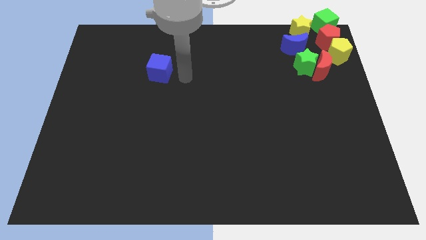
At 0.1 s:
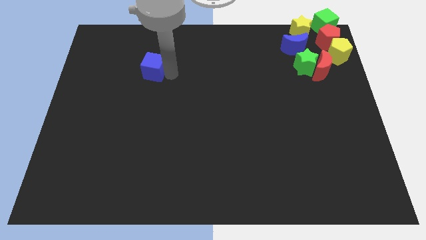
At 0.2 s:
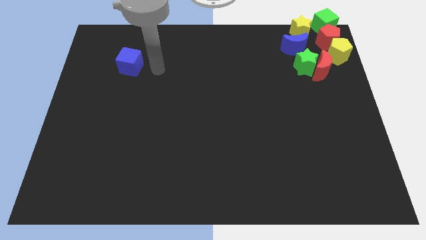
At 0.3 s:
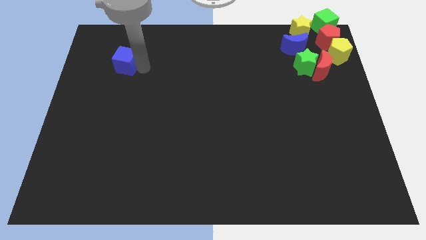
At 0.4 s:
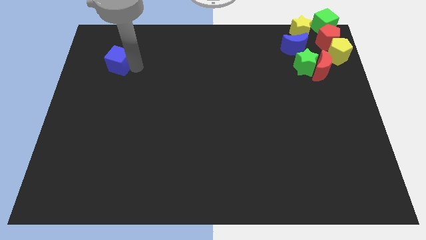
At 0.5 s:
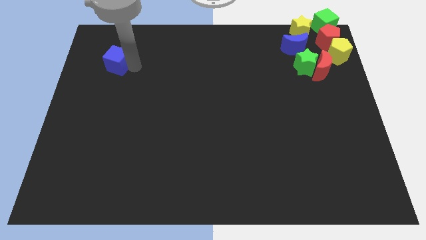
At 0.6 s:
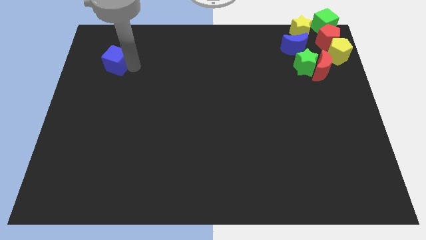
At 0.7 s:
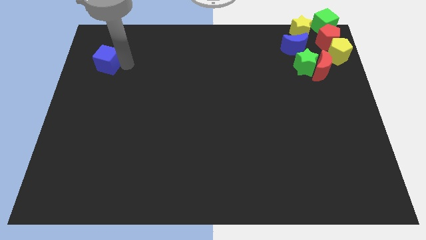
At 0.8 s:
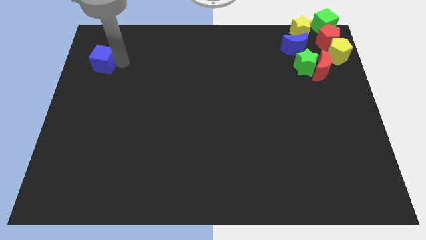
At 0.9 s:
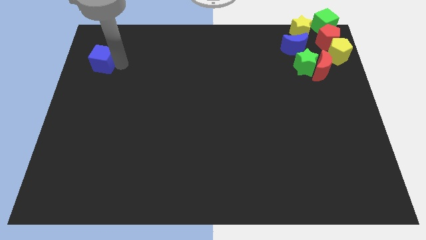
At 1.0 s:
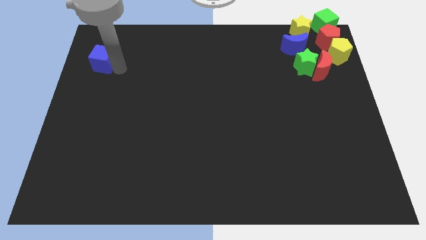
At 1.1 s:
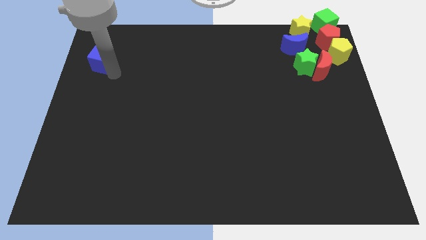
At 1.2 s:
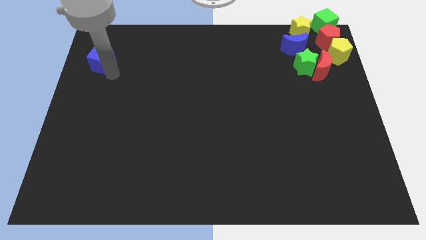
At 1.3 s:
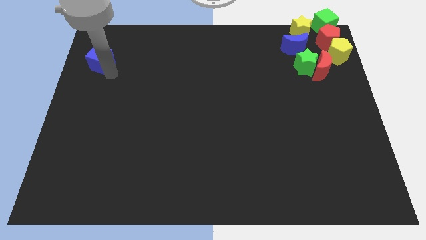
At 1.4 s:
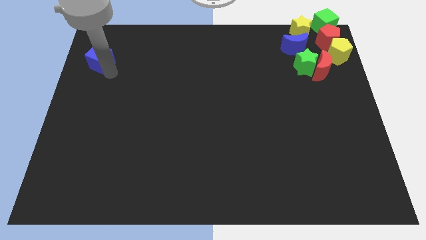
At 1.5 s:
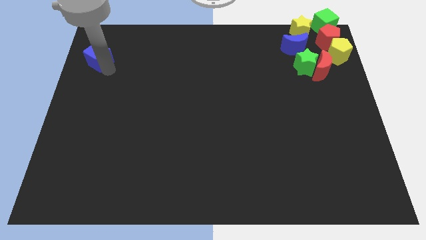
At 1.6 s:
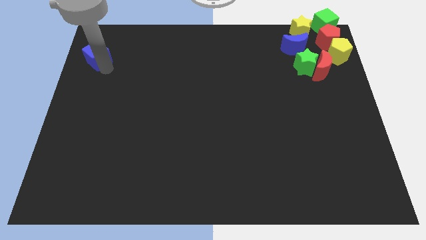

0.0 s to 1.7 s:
slide blue cube to the top left

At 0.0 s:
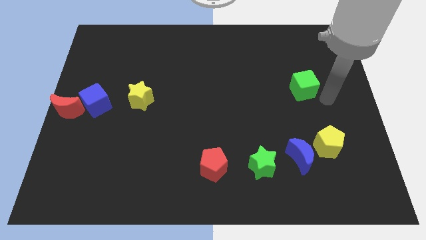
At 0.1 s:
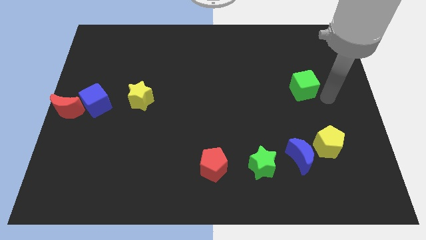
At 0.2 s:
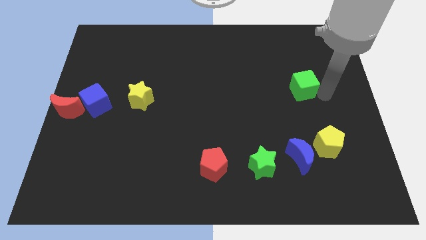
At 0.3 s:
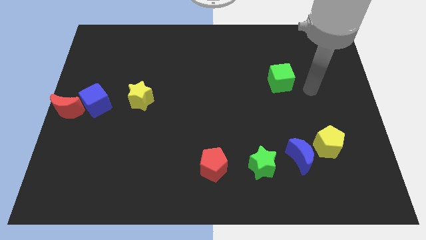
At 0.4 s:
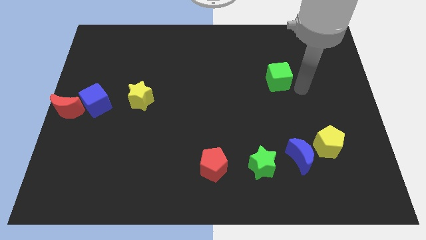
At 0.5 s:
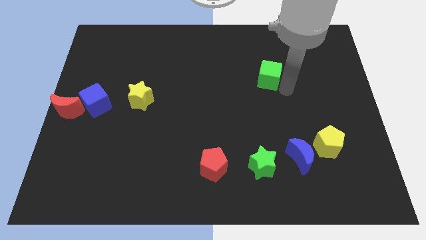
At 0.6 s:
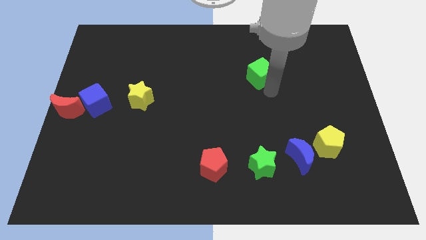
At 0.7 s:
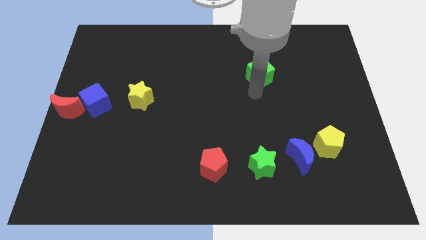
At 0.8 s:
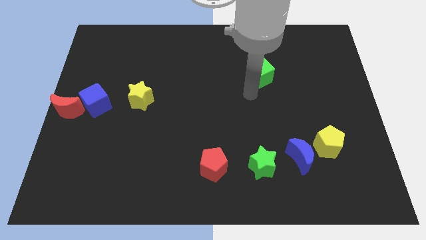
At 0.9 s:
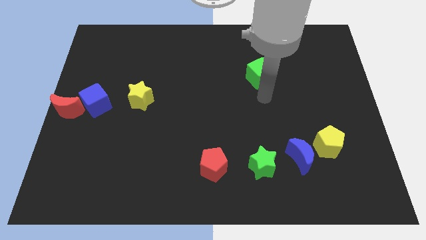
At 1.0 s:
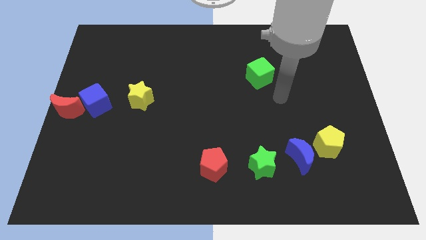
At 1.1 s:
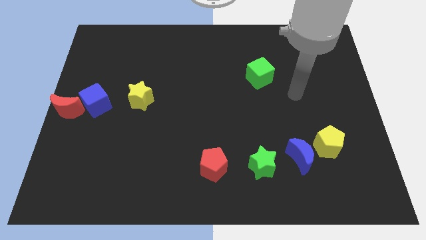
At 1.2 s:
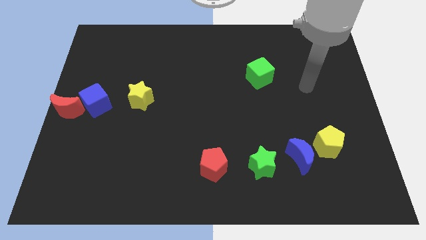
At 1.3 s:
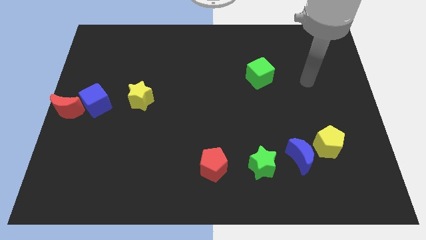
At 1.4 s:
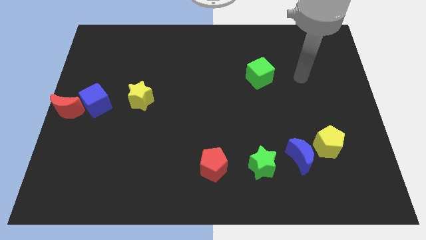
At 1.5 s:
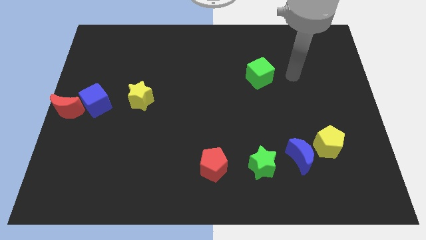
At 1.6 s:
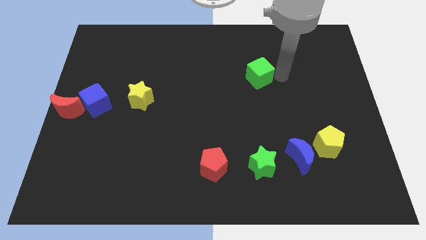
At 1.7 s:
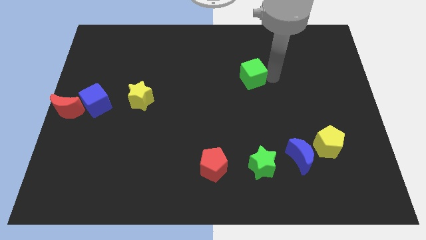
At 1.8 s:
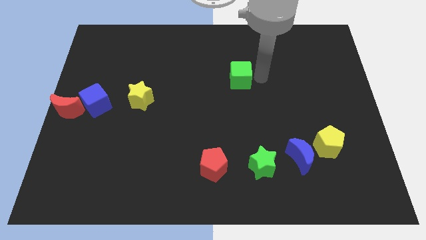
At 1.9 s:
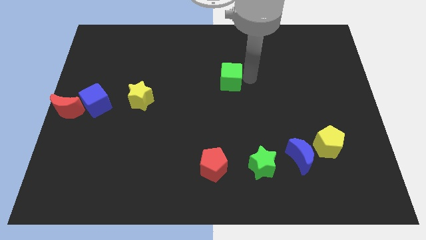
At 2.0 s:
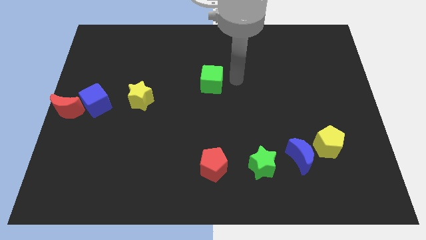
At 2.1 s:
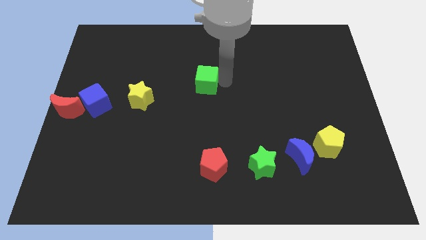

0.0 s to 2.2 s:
push green cube towards center

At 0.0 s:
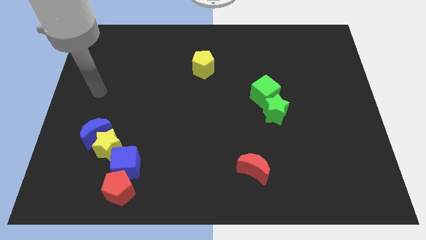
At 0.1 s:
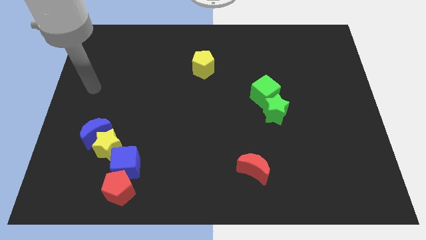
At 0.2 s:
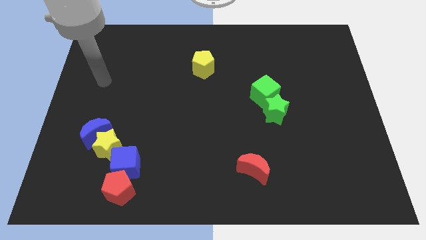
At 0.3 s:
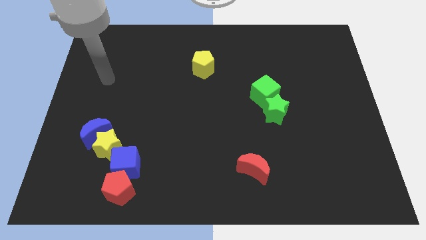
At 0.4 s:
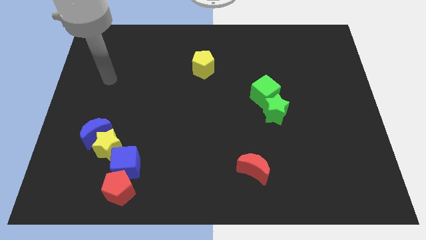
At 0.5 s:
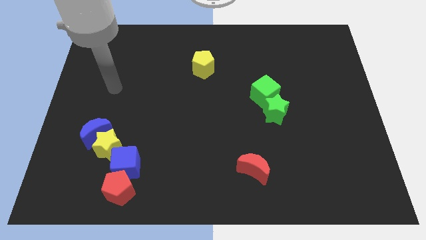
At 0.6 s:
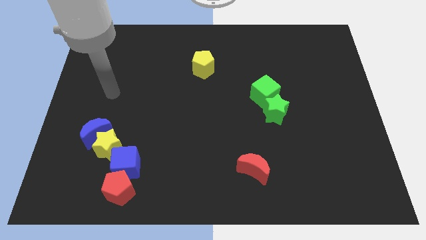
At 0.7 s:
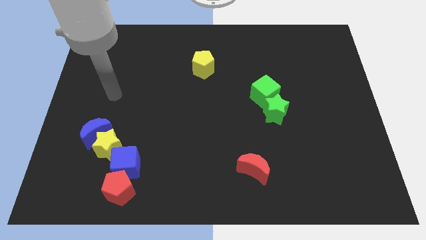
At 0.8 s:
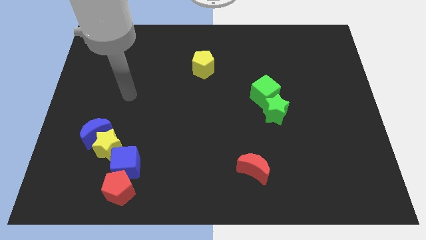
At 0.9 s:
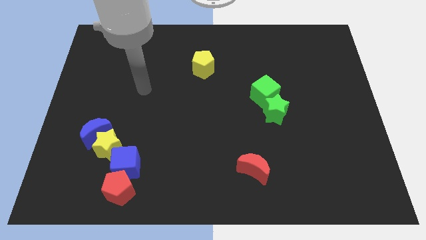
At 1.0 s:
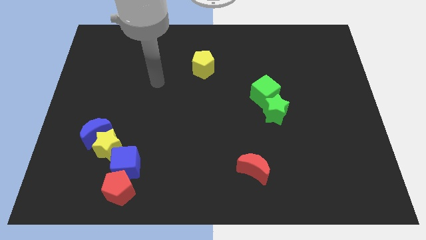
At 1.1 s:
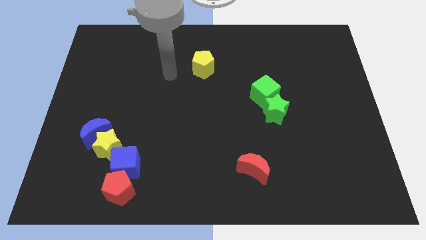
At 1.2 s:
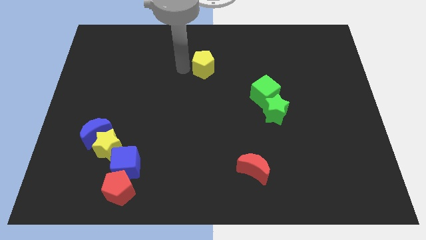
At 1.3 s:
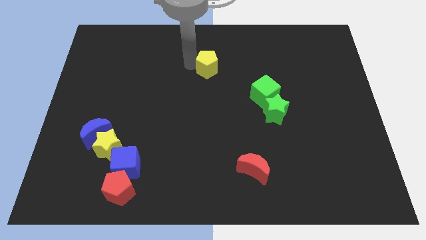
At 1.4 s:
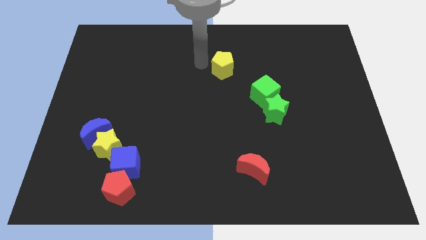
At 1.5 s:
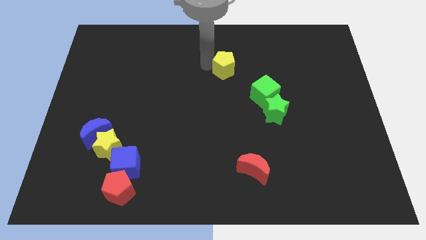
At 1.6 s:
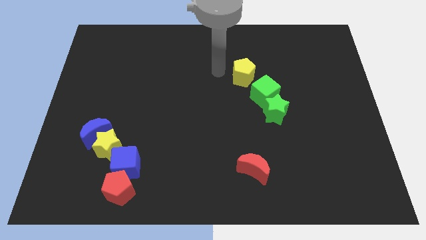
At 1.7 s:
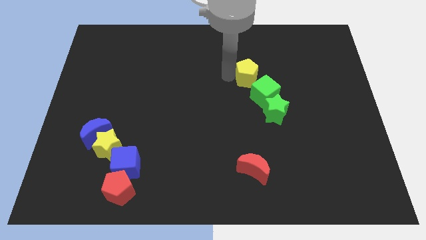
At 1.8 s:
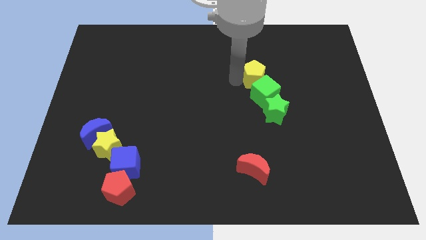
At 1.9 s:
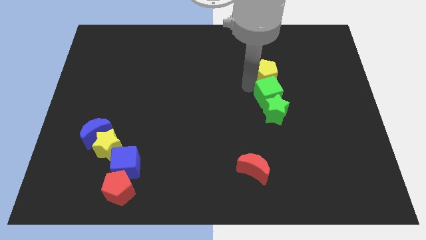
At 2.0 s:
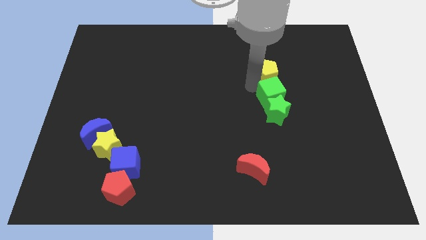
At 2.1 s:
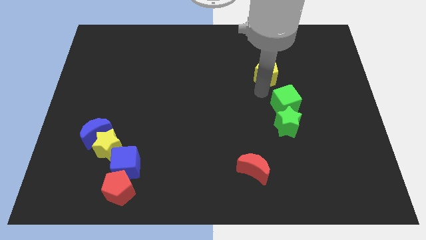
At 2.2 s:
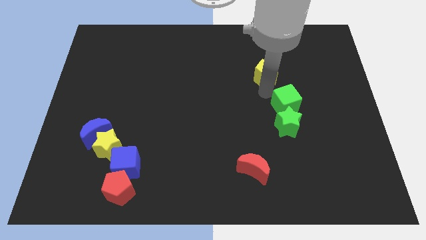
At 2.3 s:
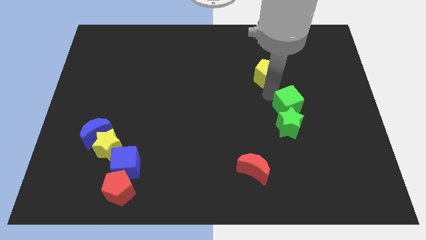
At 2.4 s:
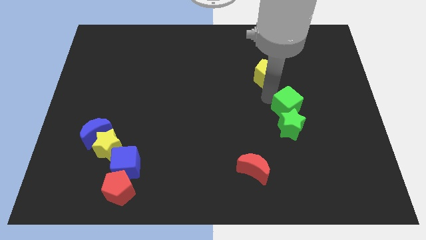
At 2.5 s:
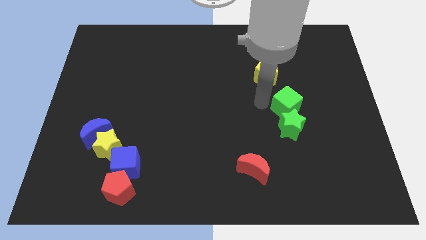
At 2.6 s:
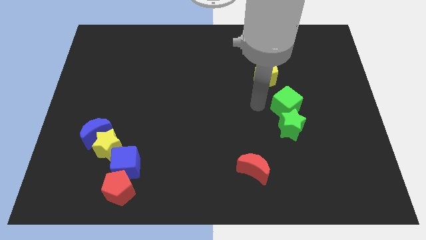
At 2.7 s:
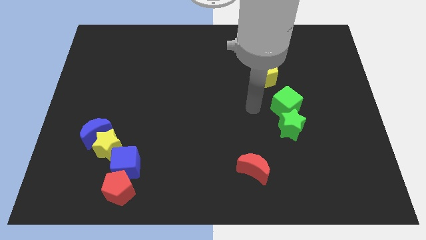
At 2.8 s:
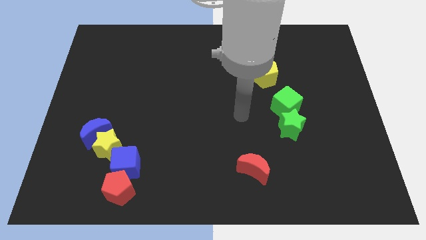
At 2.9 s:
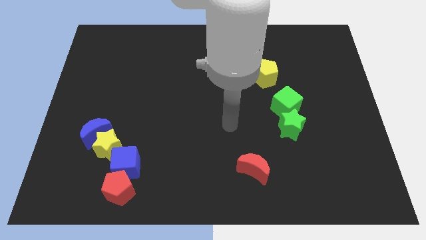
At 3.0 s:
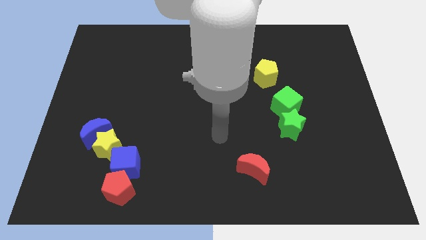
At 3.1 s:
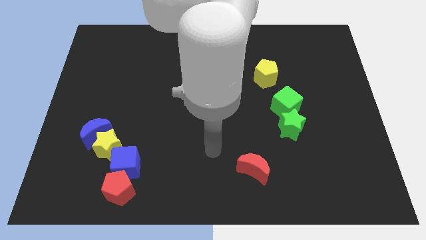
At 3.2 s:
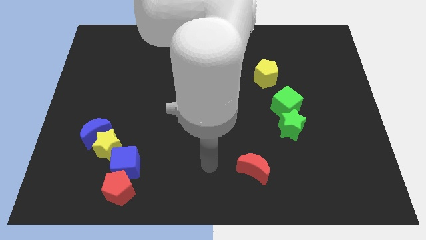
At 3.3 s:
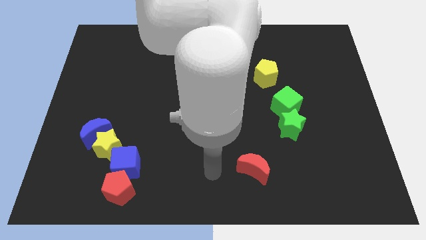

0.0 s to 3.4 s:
push the yellow pentagon towards the group of green blocks

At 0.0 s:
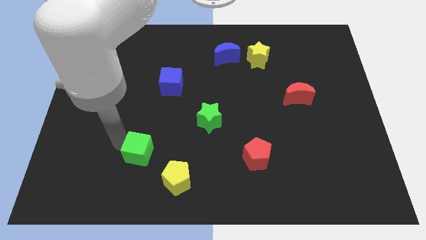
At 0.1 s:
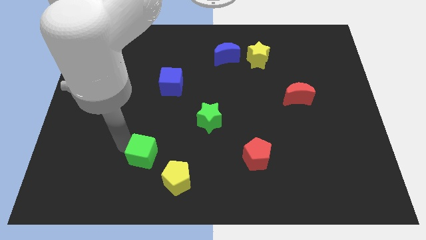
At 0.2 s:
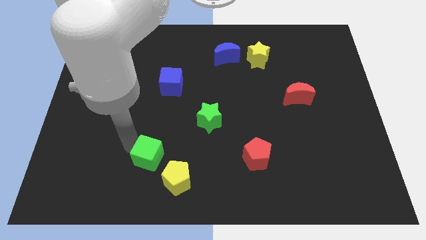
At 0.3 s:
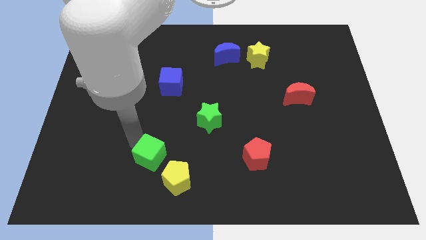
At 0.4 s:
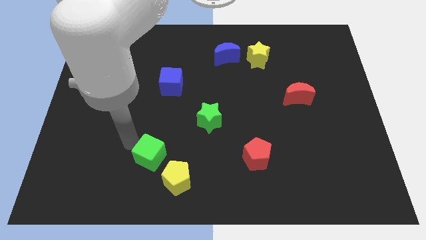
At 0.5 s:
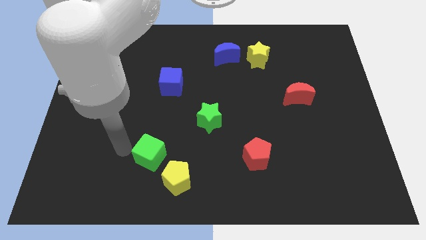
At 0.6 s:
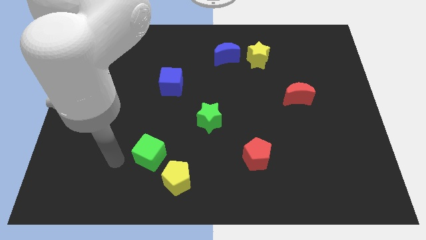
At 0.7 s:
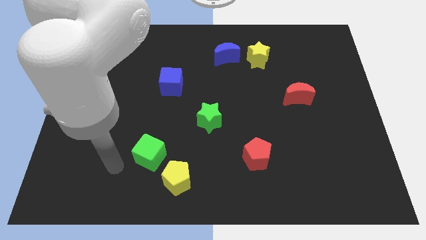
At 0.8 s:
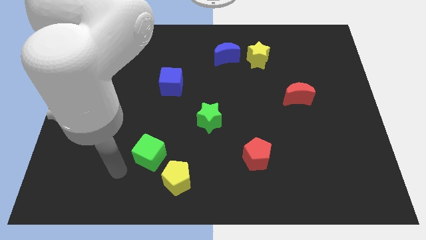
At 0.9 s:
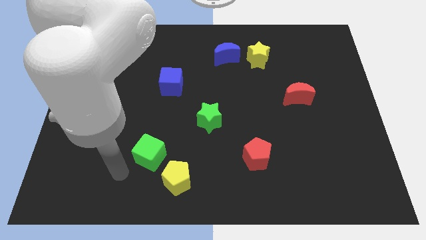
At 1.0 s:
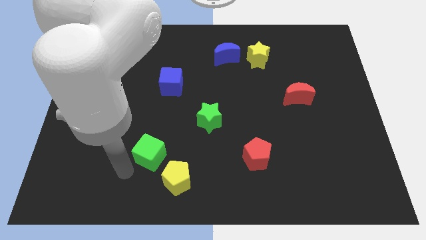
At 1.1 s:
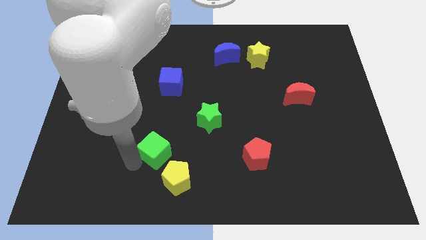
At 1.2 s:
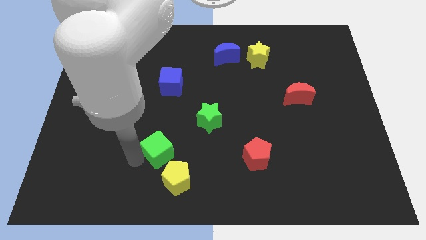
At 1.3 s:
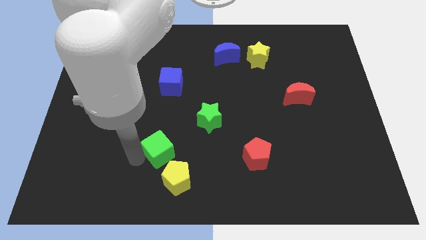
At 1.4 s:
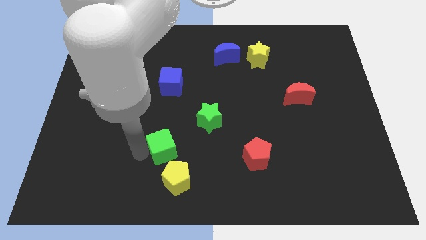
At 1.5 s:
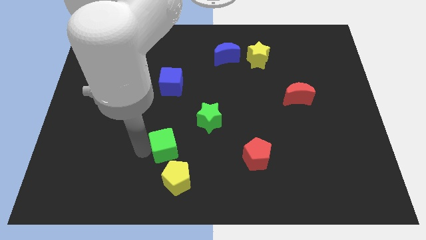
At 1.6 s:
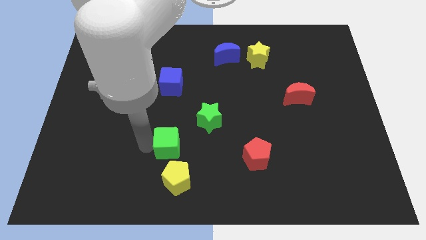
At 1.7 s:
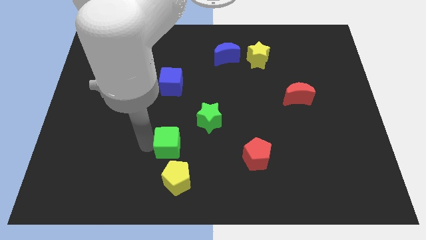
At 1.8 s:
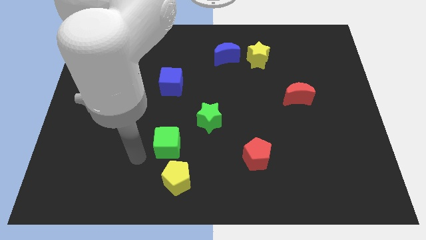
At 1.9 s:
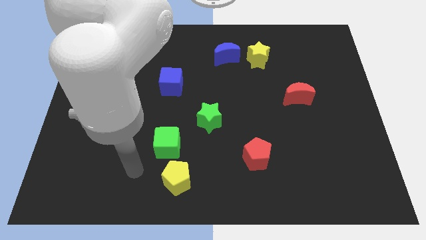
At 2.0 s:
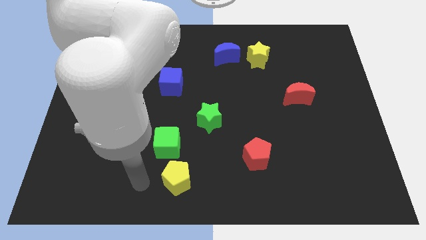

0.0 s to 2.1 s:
move the green cube to the top of the yellow pentagon
